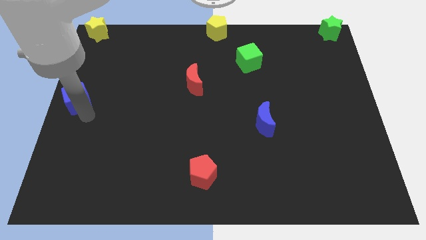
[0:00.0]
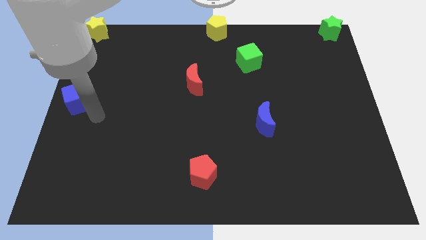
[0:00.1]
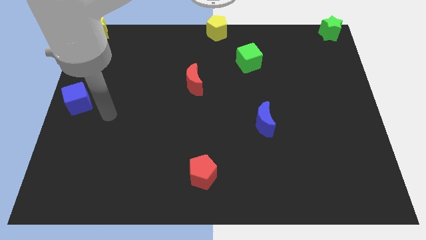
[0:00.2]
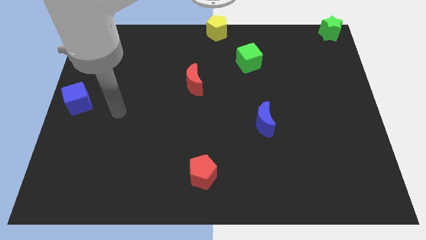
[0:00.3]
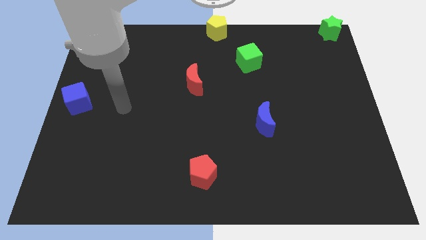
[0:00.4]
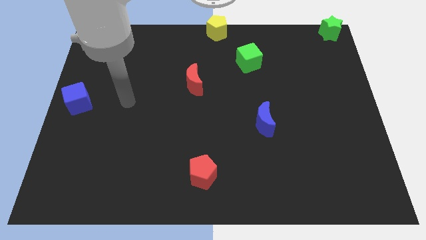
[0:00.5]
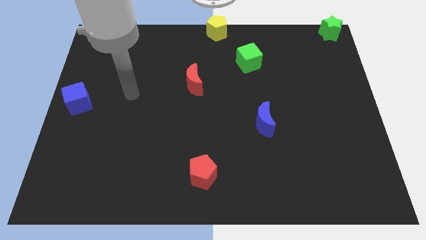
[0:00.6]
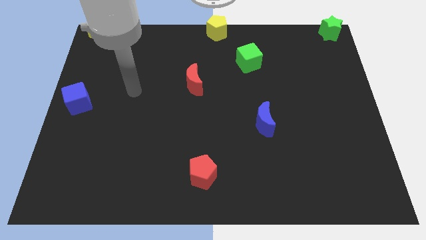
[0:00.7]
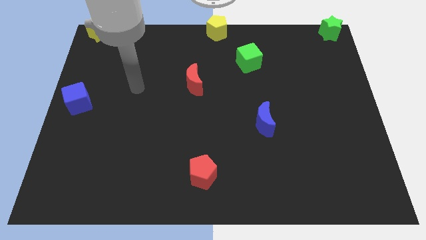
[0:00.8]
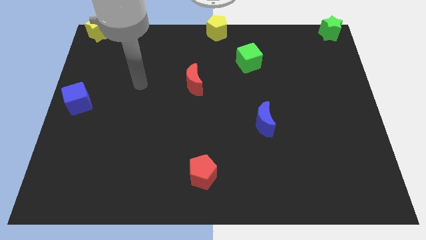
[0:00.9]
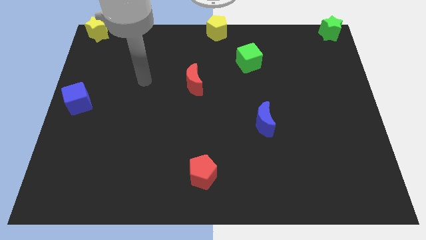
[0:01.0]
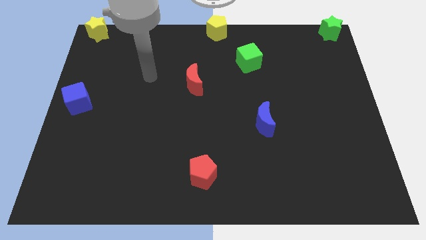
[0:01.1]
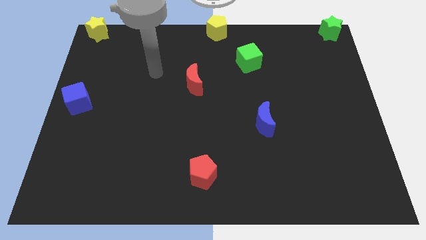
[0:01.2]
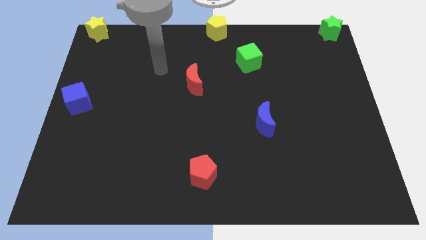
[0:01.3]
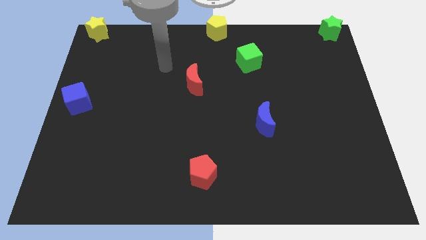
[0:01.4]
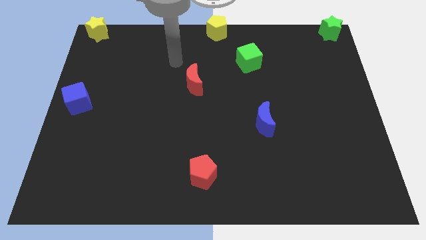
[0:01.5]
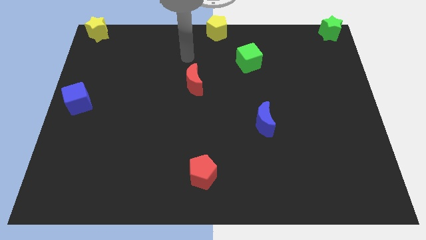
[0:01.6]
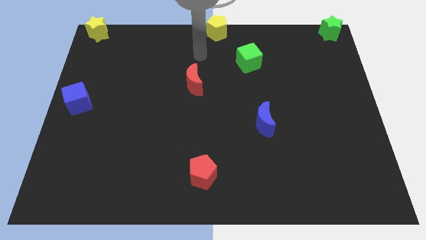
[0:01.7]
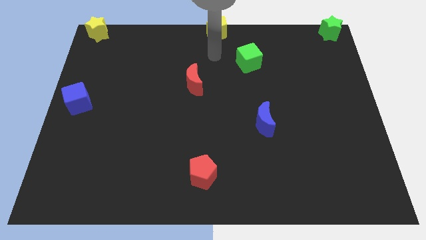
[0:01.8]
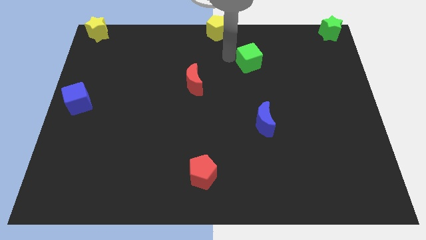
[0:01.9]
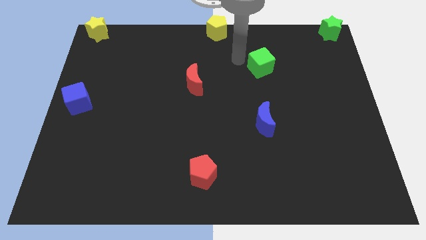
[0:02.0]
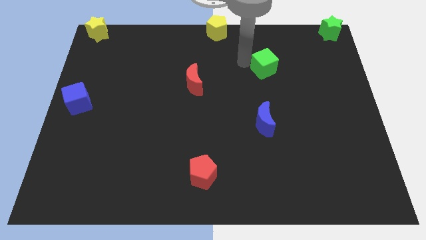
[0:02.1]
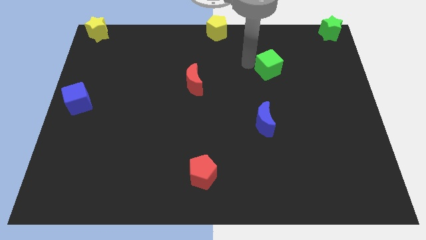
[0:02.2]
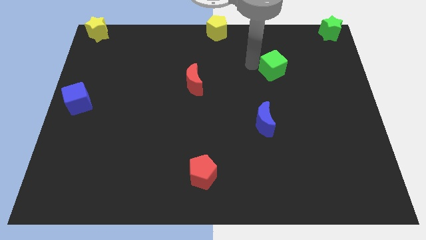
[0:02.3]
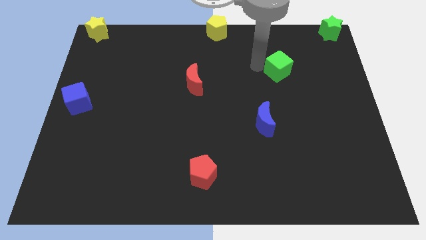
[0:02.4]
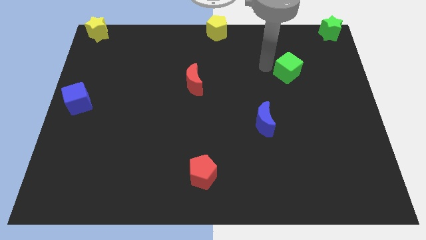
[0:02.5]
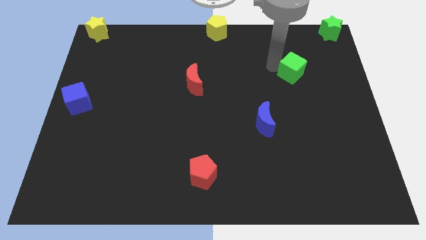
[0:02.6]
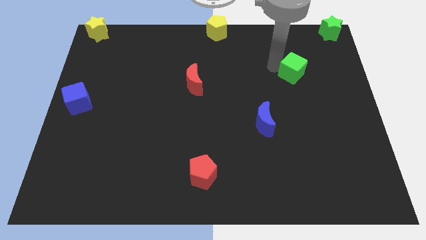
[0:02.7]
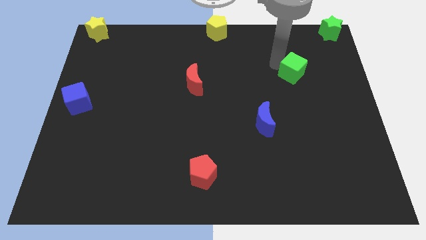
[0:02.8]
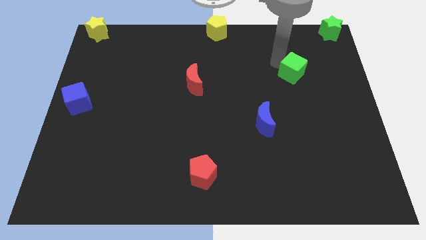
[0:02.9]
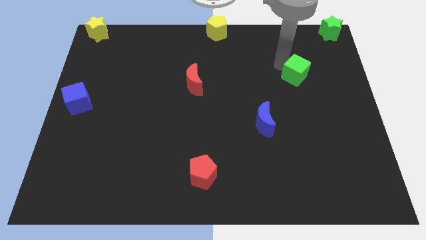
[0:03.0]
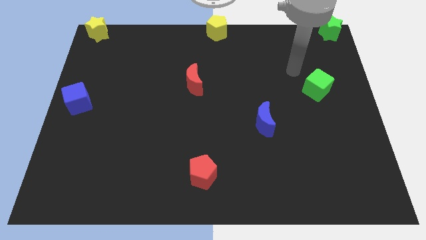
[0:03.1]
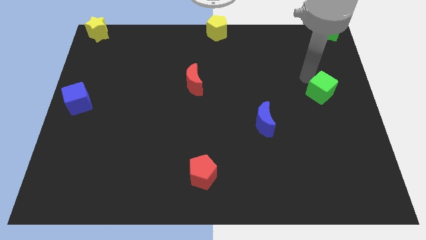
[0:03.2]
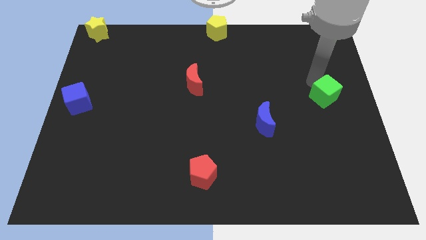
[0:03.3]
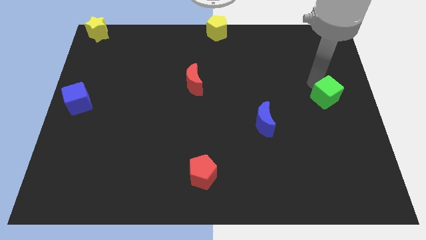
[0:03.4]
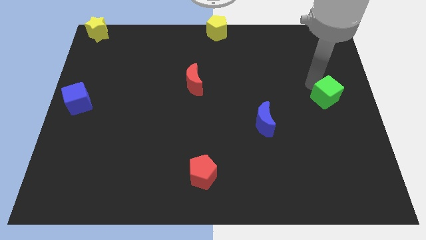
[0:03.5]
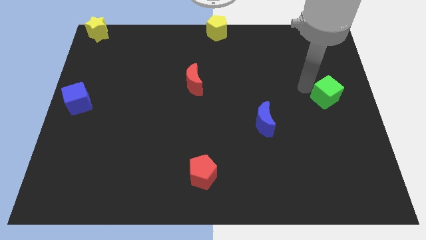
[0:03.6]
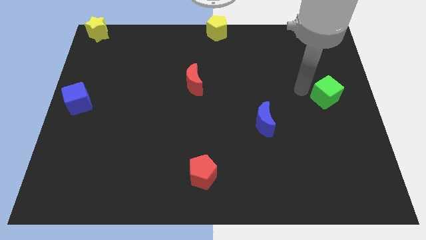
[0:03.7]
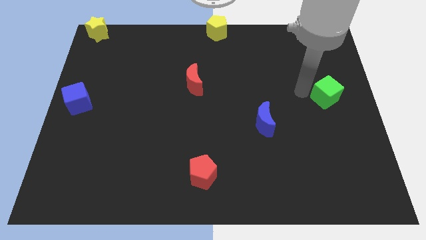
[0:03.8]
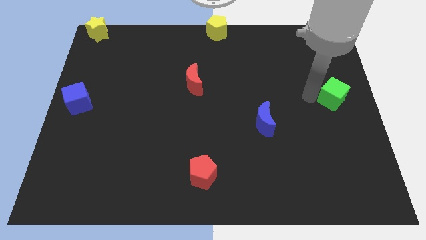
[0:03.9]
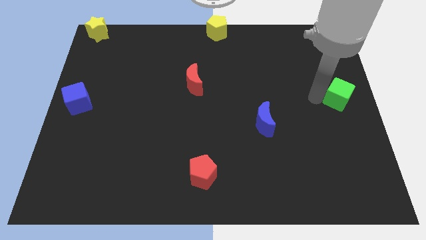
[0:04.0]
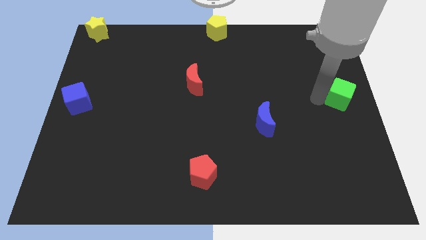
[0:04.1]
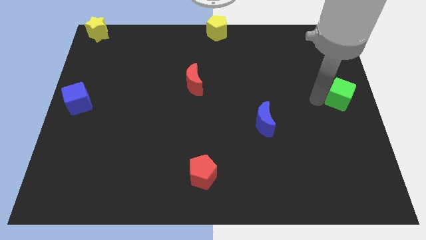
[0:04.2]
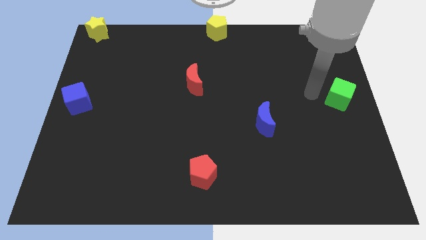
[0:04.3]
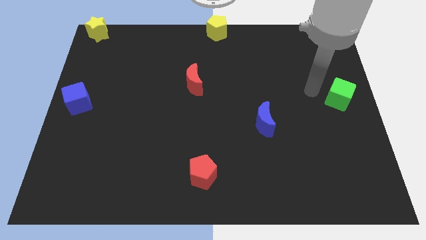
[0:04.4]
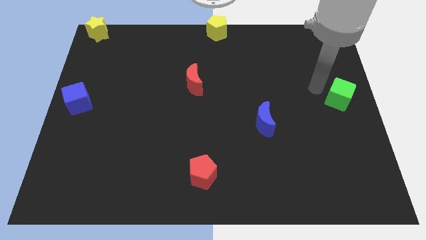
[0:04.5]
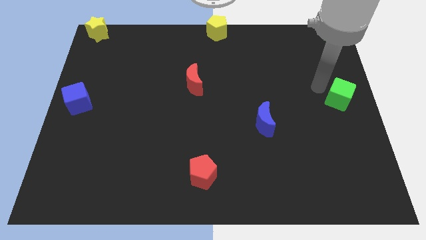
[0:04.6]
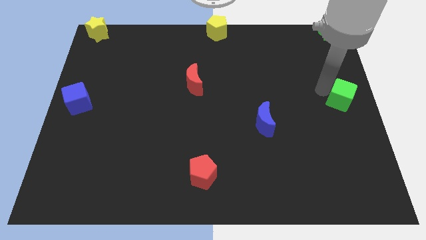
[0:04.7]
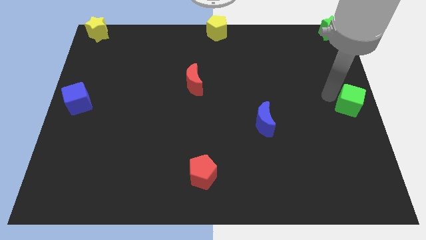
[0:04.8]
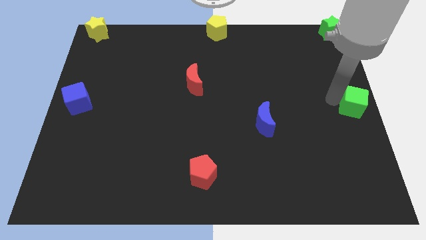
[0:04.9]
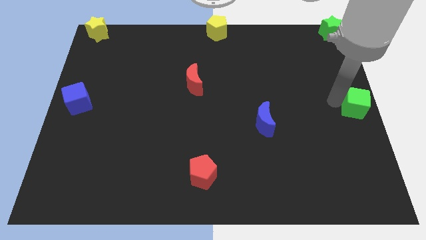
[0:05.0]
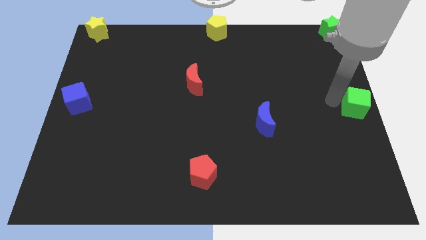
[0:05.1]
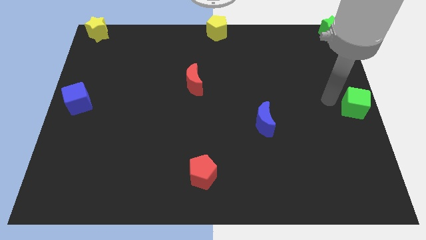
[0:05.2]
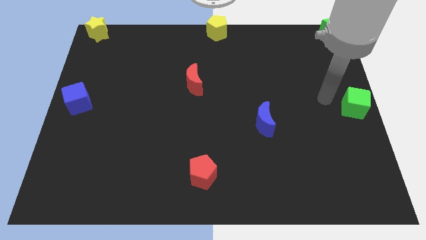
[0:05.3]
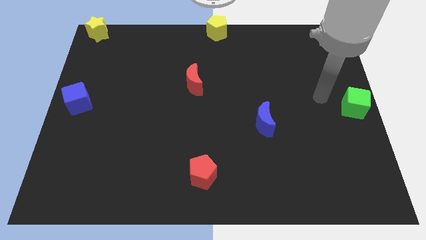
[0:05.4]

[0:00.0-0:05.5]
push the green cube to the center right of the board

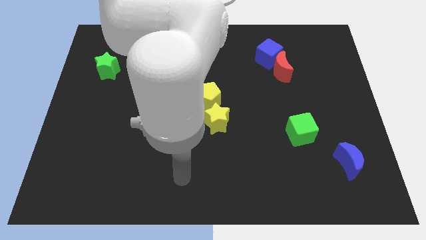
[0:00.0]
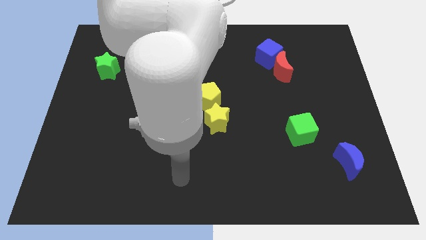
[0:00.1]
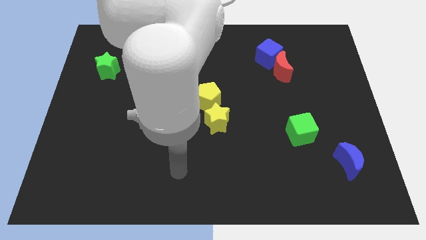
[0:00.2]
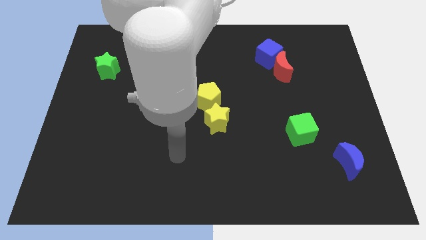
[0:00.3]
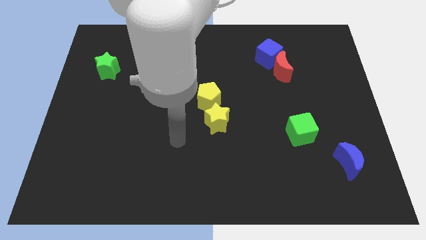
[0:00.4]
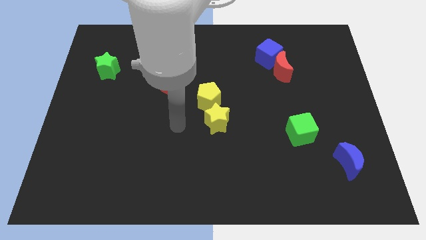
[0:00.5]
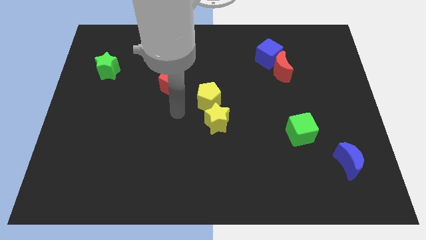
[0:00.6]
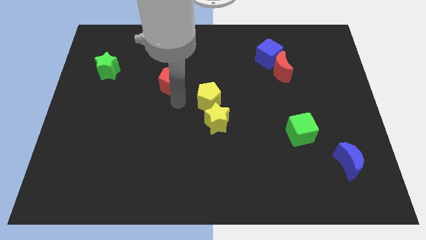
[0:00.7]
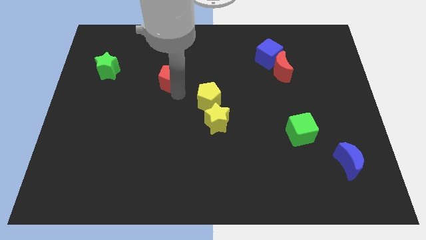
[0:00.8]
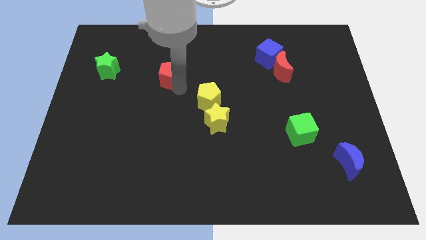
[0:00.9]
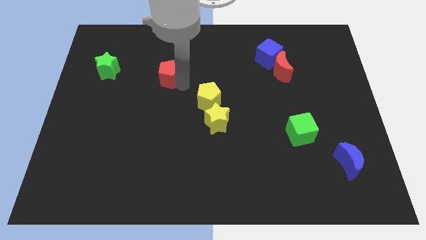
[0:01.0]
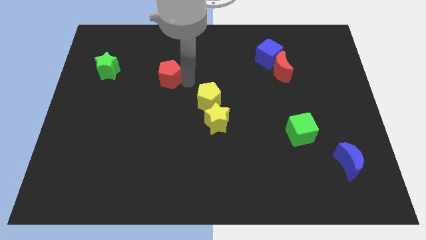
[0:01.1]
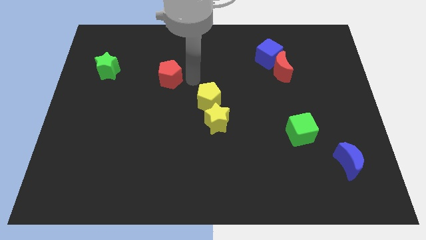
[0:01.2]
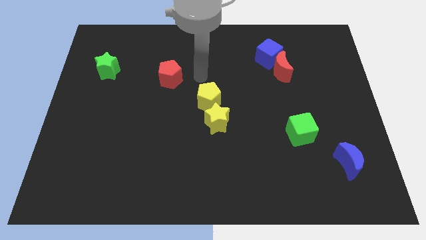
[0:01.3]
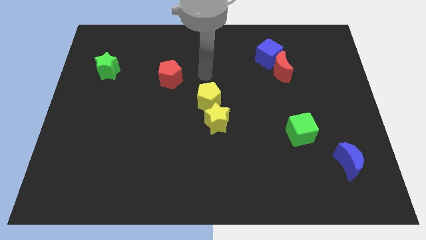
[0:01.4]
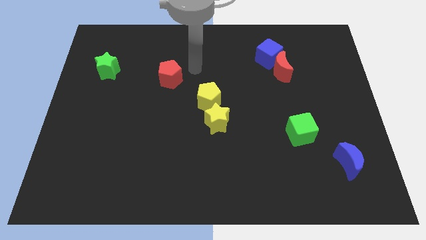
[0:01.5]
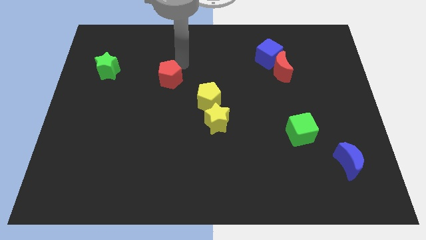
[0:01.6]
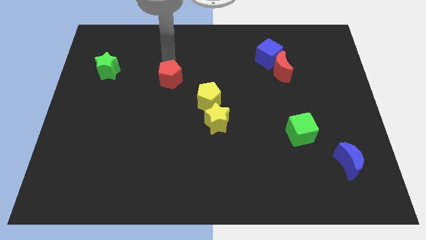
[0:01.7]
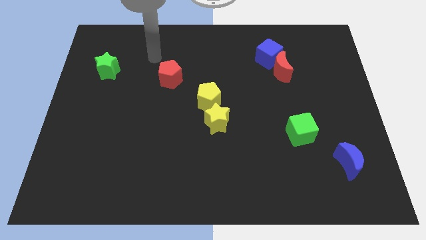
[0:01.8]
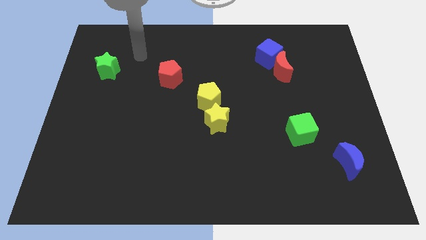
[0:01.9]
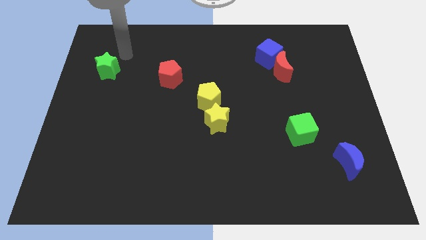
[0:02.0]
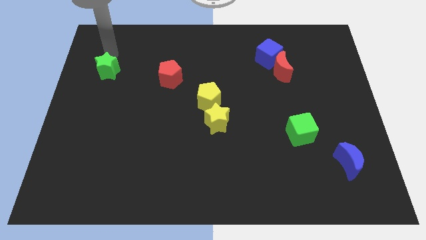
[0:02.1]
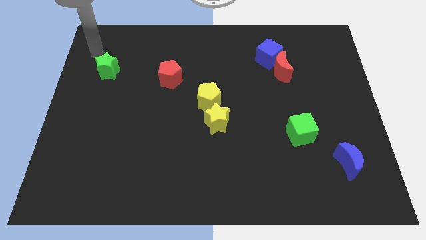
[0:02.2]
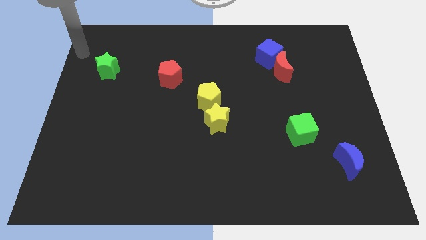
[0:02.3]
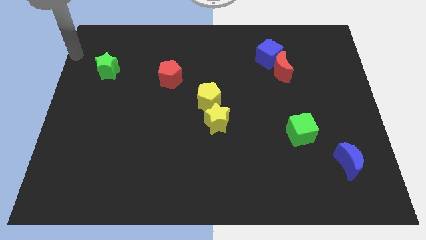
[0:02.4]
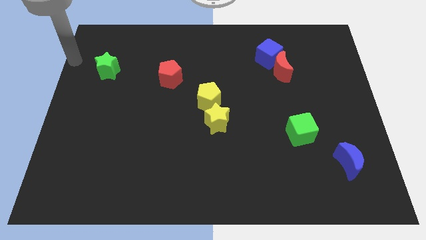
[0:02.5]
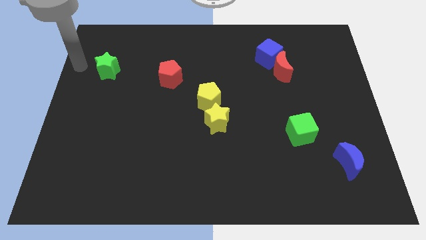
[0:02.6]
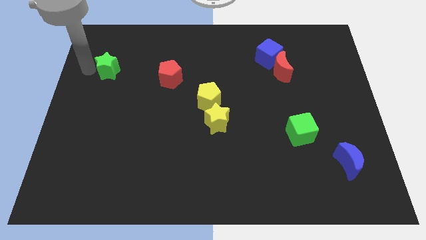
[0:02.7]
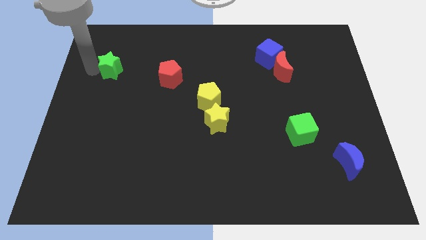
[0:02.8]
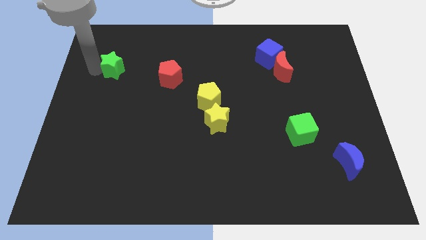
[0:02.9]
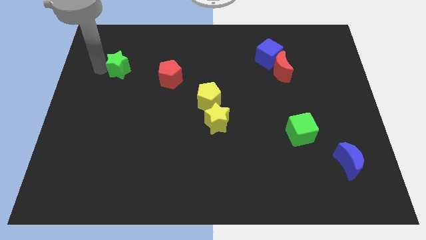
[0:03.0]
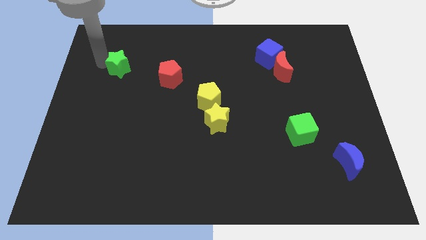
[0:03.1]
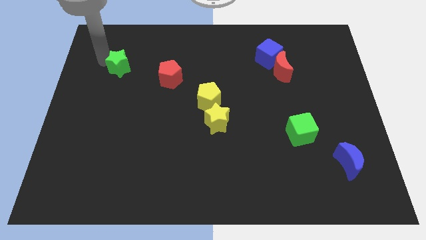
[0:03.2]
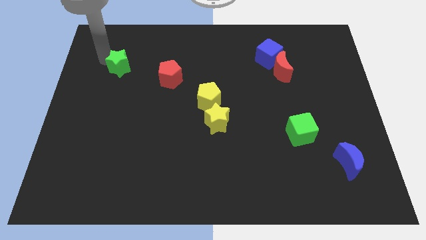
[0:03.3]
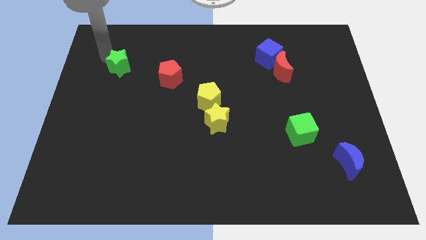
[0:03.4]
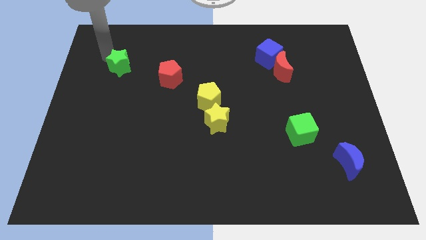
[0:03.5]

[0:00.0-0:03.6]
place the arm diagonal to the green star
